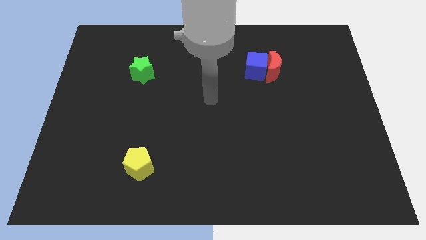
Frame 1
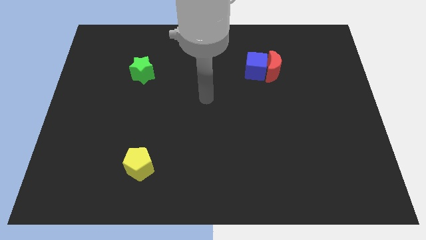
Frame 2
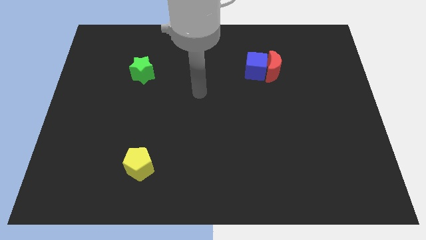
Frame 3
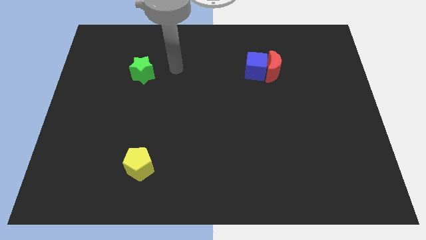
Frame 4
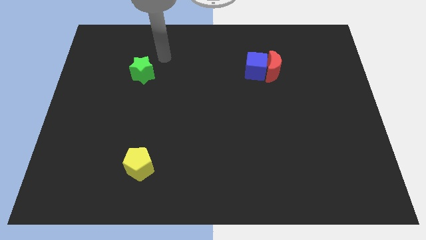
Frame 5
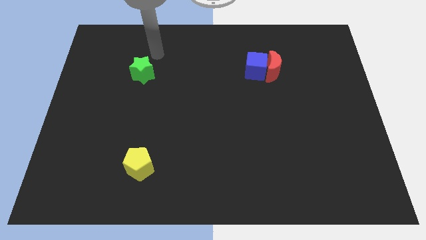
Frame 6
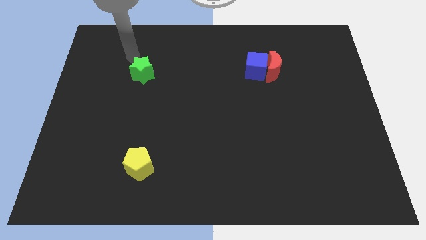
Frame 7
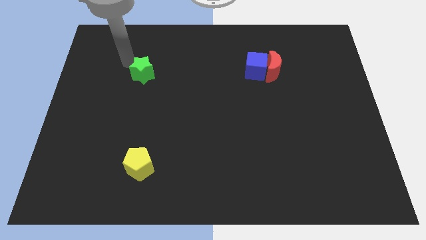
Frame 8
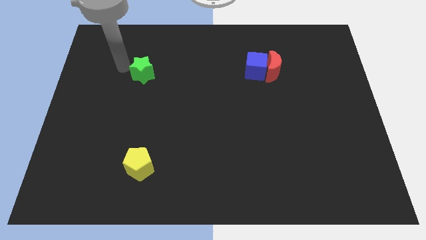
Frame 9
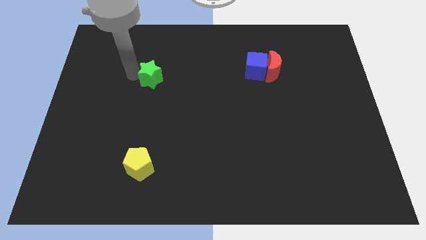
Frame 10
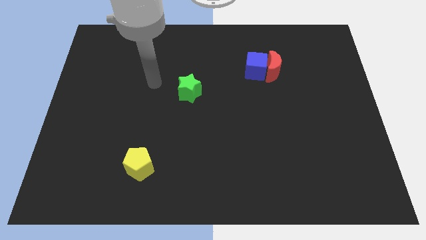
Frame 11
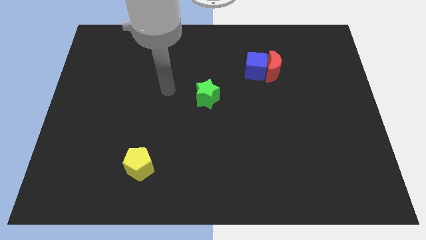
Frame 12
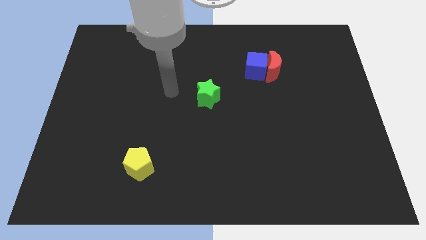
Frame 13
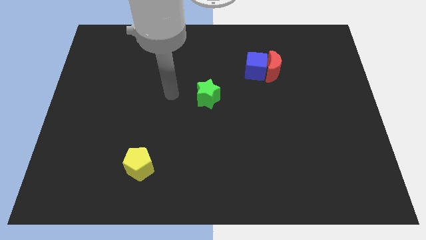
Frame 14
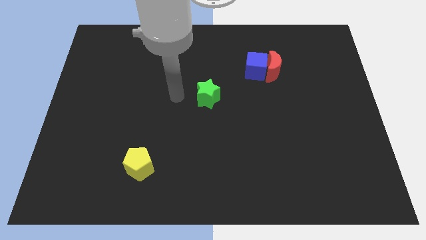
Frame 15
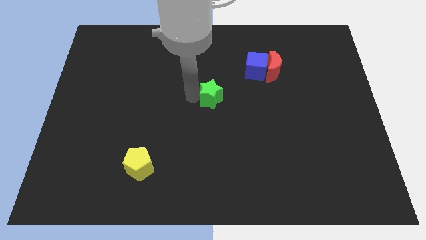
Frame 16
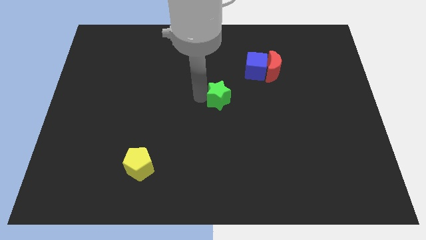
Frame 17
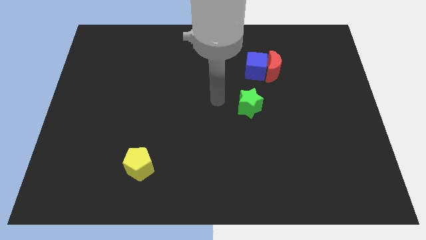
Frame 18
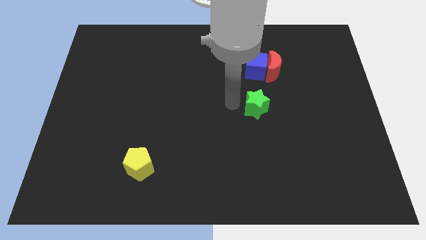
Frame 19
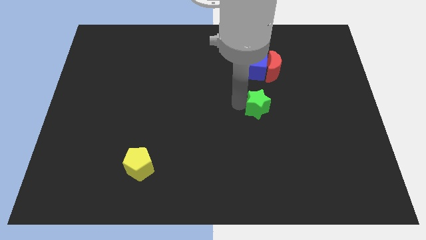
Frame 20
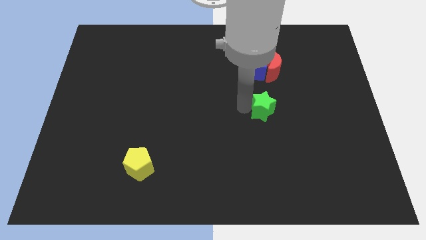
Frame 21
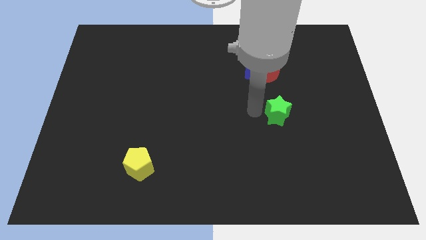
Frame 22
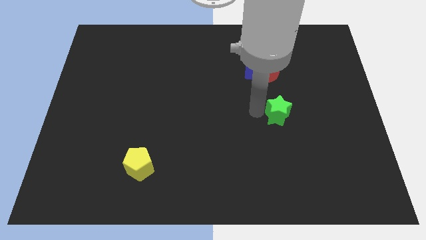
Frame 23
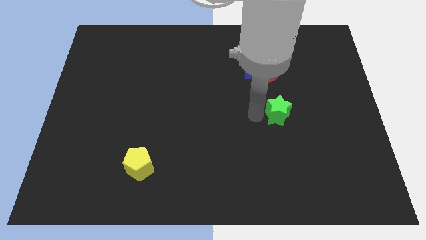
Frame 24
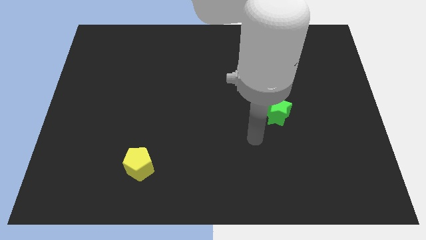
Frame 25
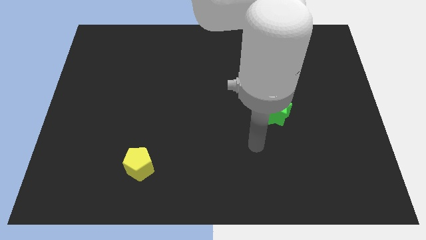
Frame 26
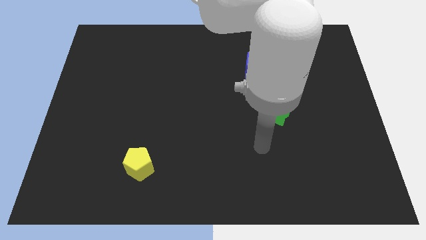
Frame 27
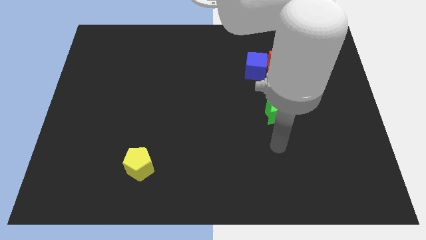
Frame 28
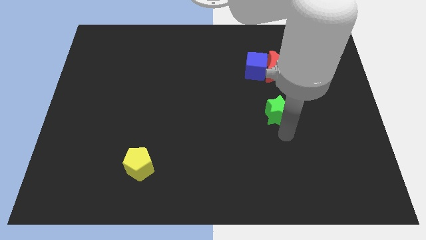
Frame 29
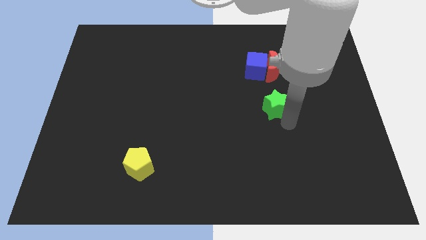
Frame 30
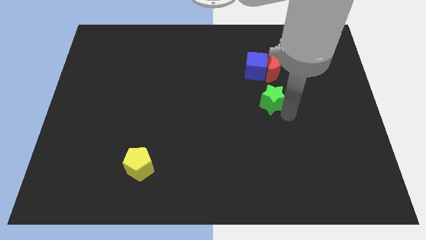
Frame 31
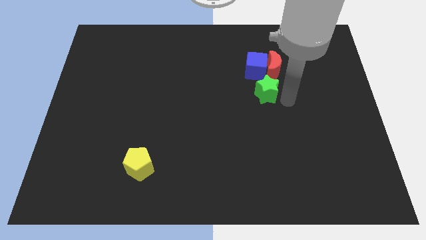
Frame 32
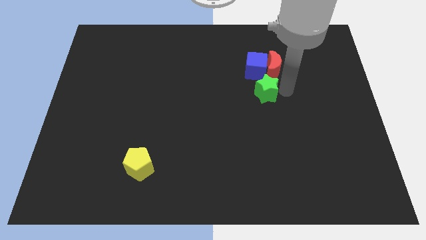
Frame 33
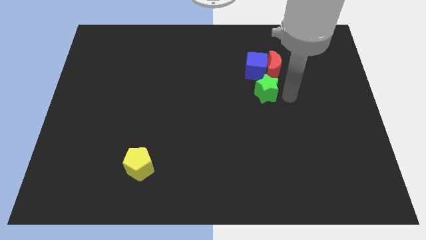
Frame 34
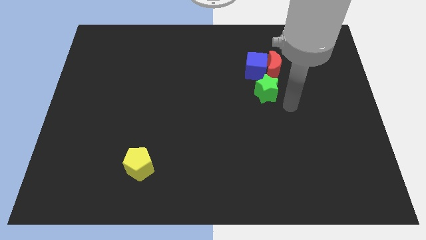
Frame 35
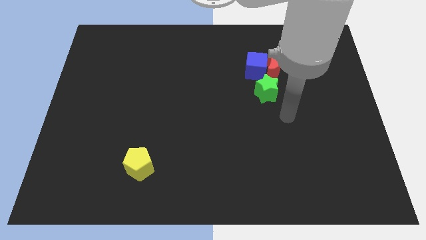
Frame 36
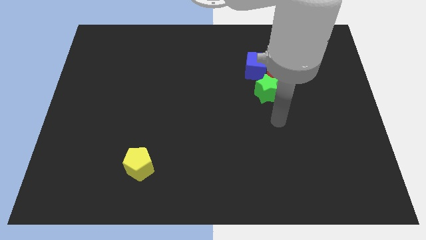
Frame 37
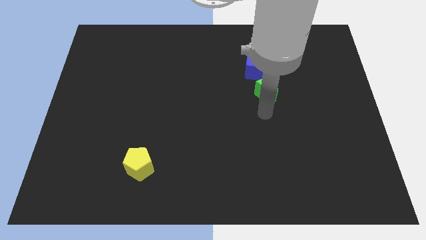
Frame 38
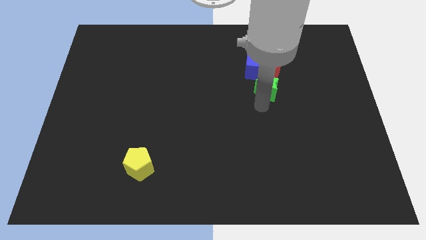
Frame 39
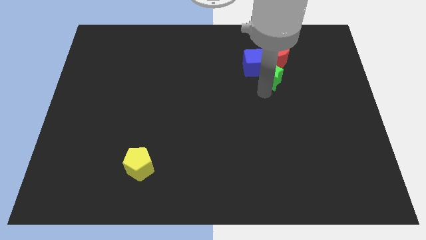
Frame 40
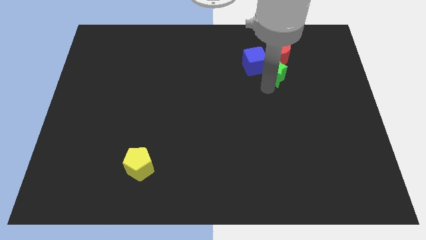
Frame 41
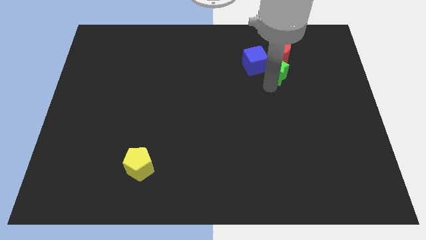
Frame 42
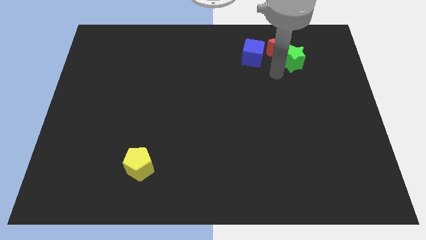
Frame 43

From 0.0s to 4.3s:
slide the star towards the red block

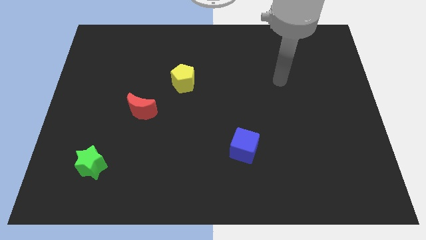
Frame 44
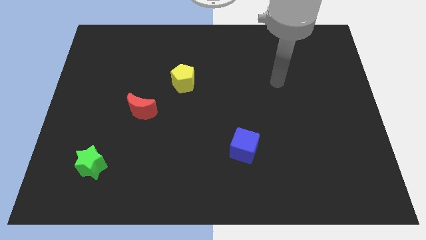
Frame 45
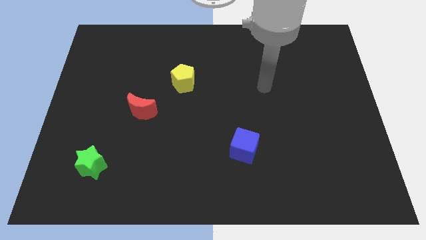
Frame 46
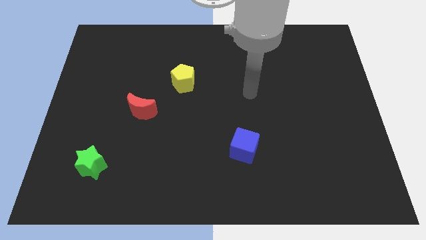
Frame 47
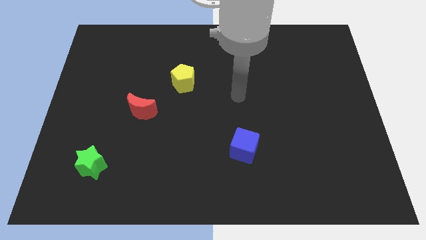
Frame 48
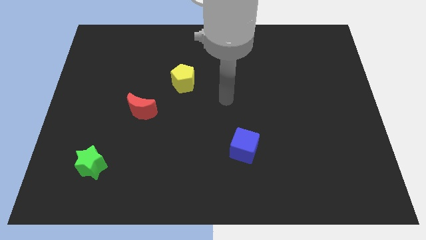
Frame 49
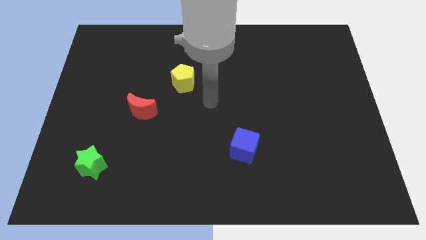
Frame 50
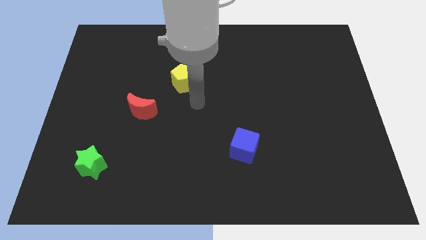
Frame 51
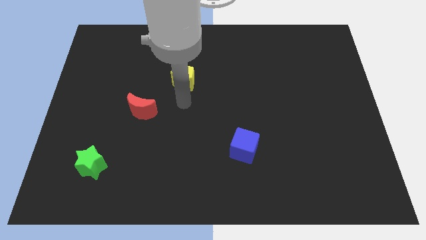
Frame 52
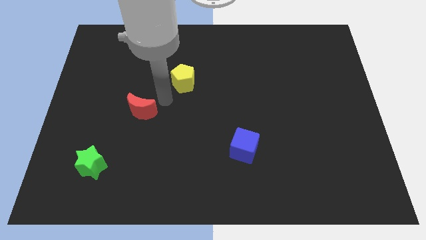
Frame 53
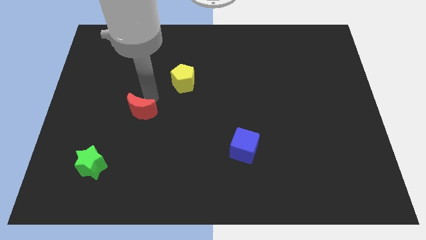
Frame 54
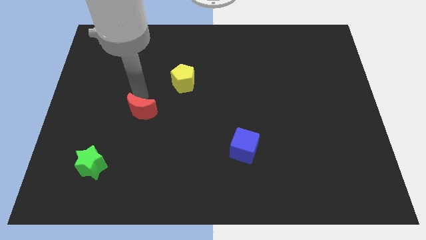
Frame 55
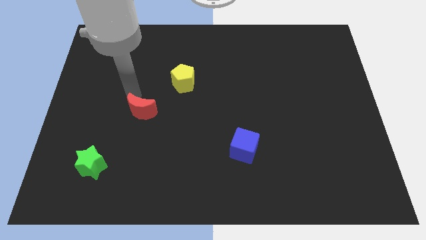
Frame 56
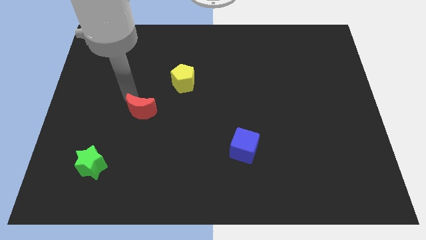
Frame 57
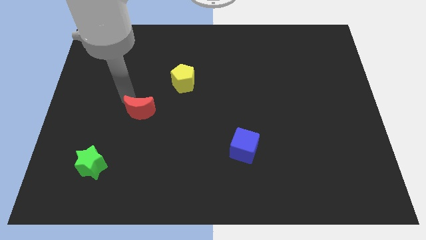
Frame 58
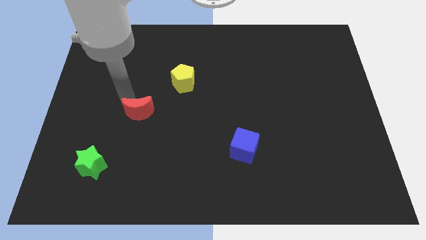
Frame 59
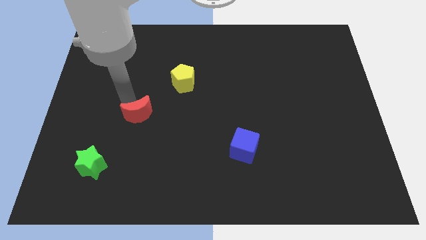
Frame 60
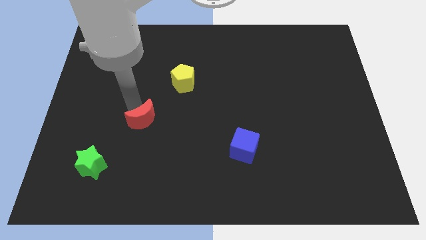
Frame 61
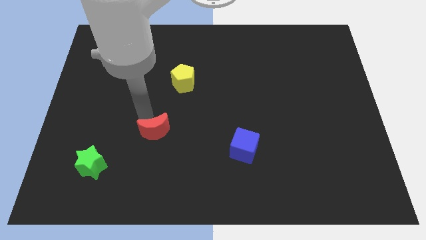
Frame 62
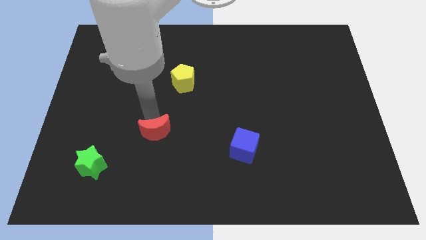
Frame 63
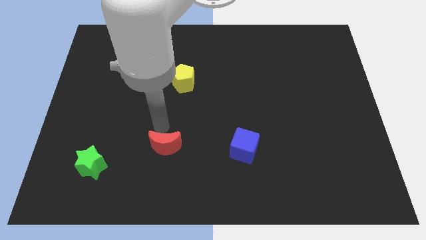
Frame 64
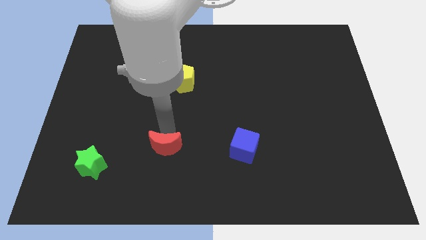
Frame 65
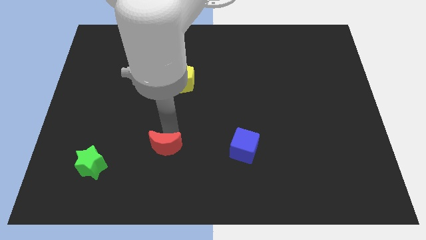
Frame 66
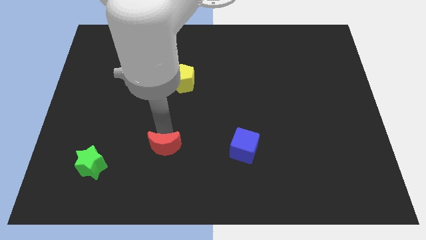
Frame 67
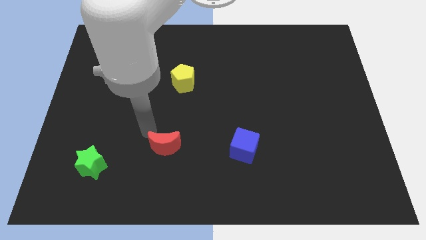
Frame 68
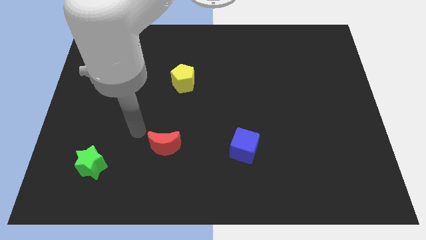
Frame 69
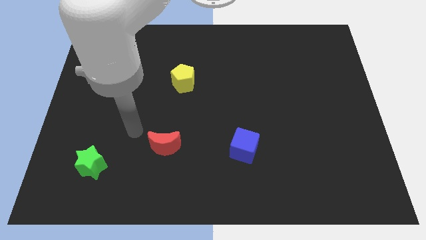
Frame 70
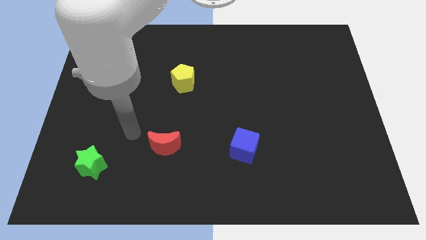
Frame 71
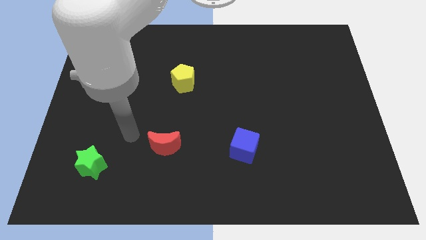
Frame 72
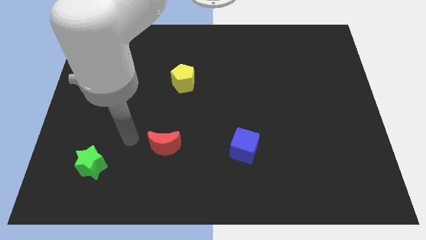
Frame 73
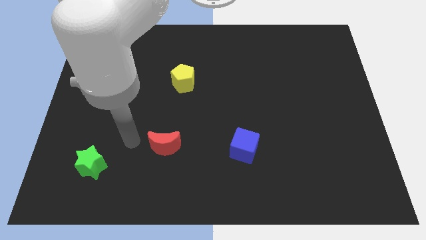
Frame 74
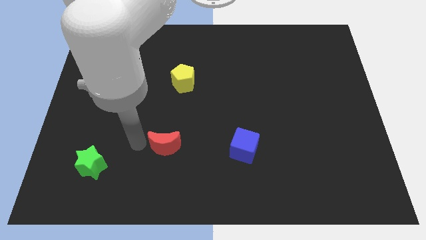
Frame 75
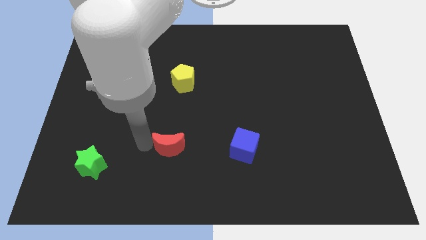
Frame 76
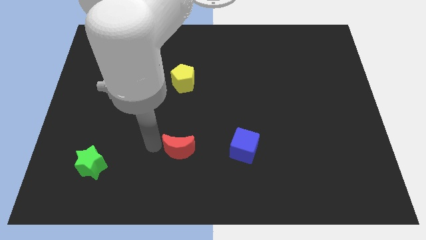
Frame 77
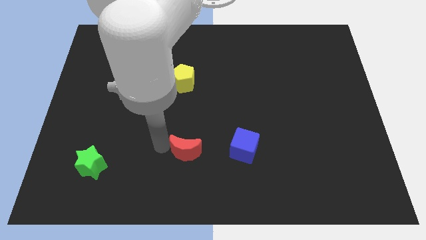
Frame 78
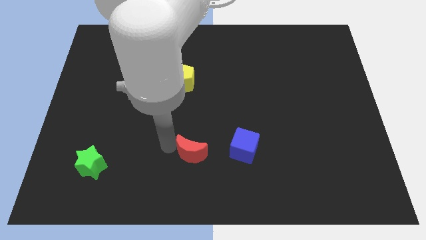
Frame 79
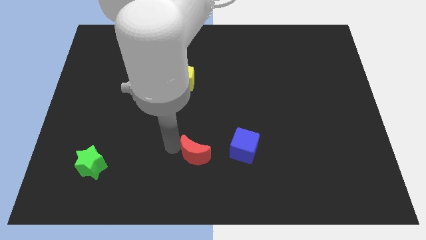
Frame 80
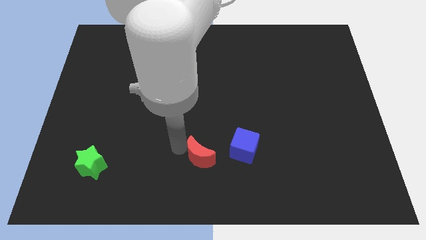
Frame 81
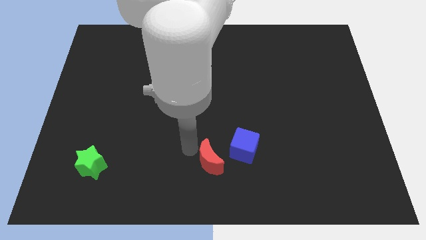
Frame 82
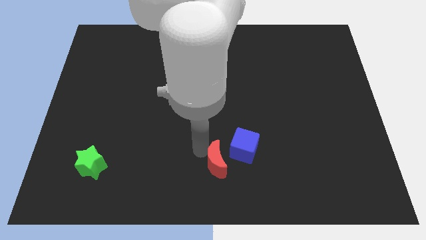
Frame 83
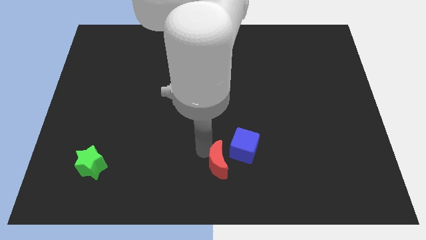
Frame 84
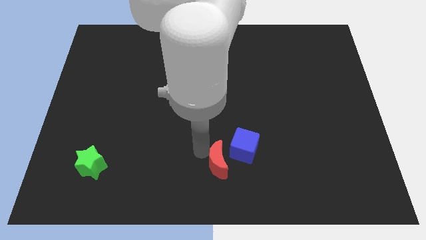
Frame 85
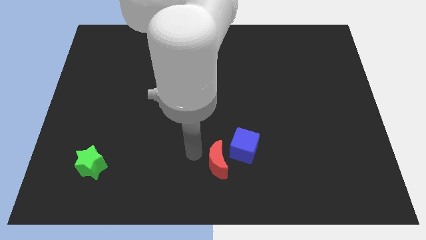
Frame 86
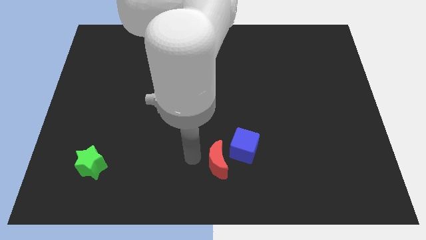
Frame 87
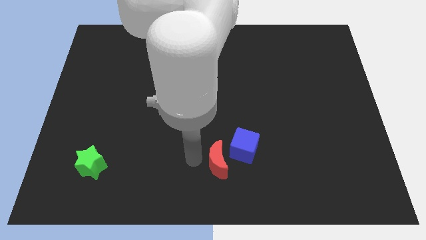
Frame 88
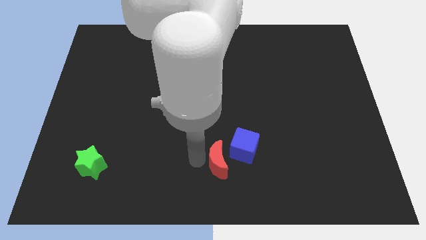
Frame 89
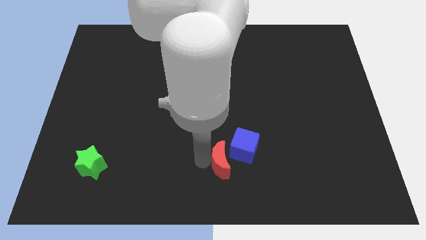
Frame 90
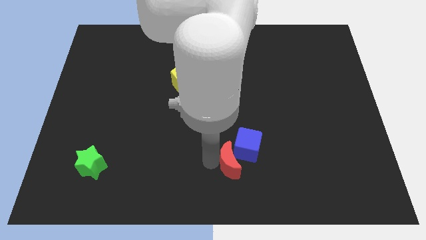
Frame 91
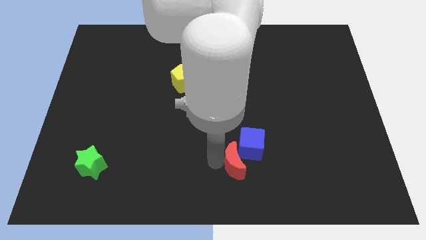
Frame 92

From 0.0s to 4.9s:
push the moon to the blue block
